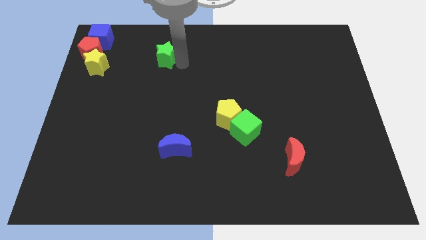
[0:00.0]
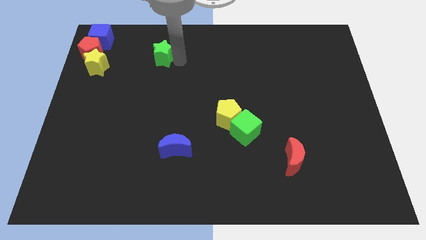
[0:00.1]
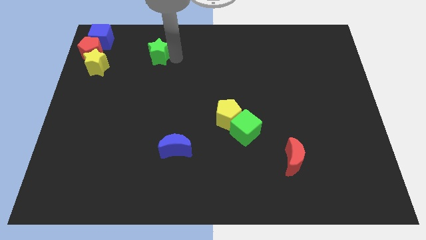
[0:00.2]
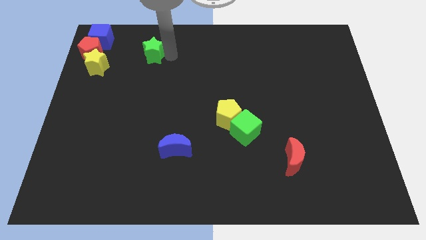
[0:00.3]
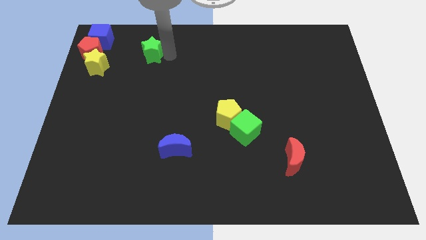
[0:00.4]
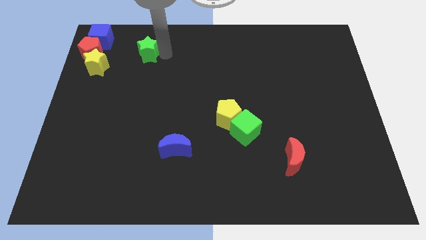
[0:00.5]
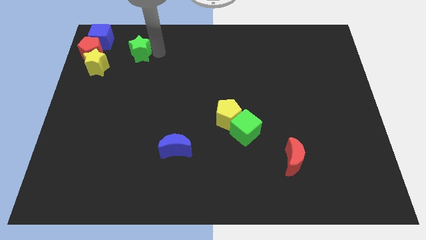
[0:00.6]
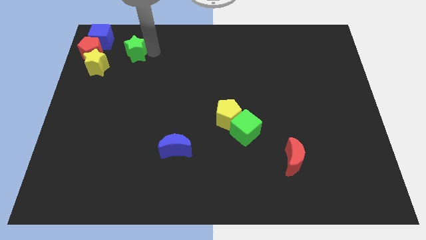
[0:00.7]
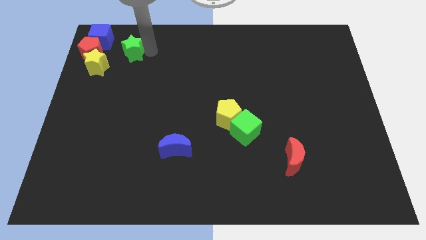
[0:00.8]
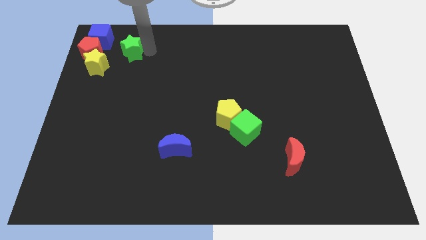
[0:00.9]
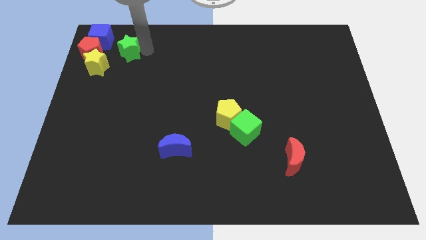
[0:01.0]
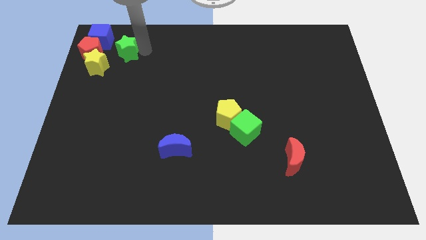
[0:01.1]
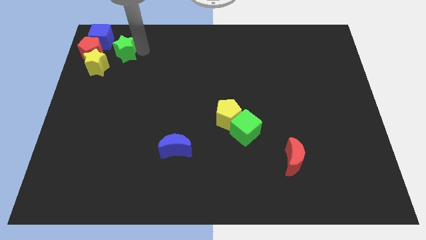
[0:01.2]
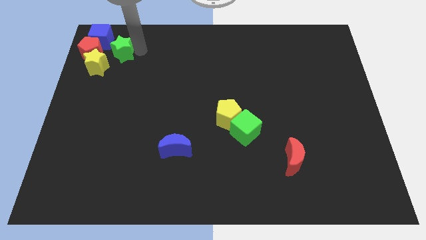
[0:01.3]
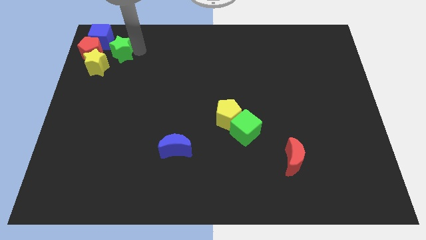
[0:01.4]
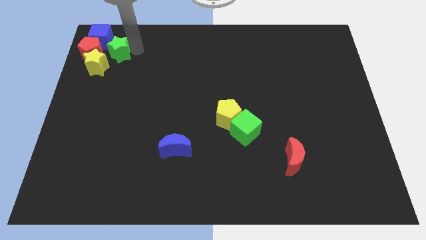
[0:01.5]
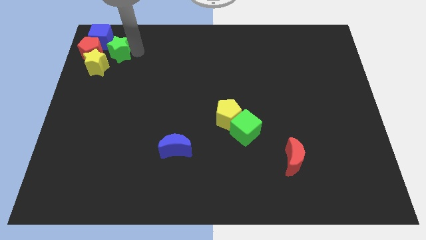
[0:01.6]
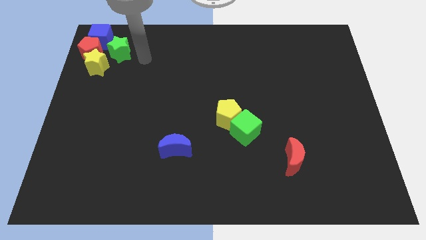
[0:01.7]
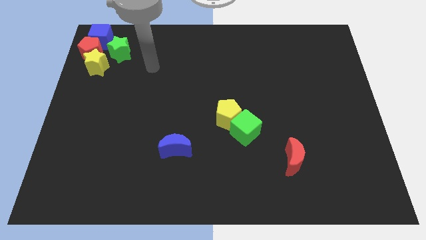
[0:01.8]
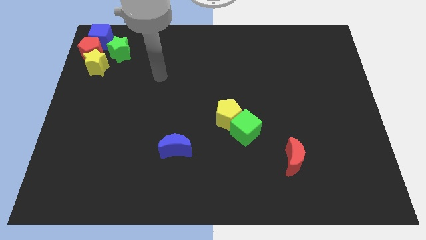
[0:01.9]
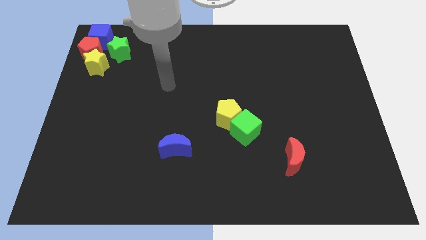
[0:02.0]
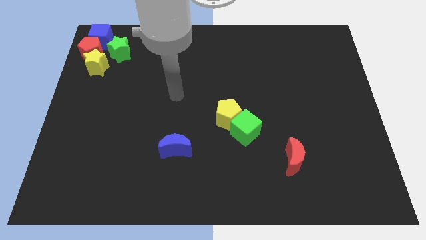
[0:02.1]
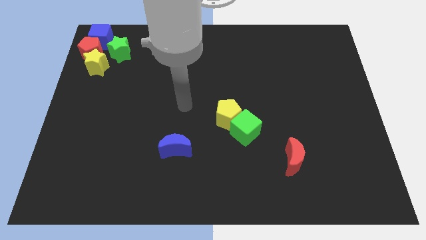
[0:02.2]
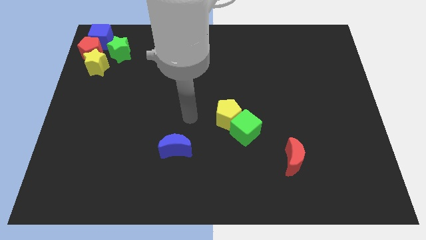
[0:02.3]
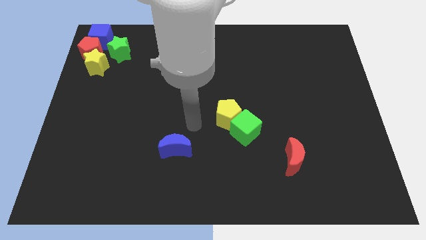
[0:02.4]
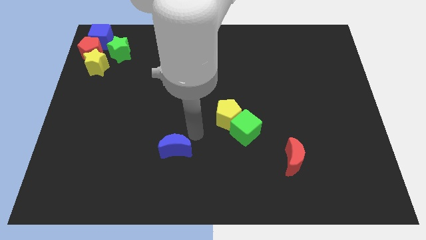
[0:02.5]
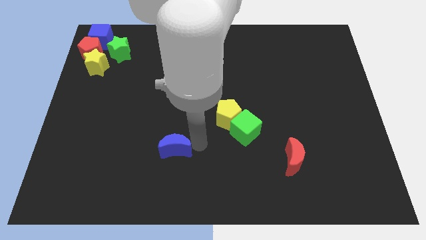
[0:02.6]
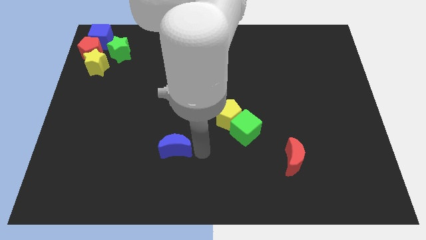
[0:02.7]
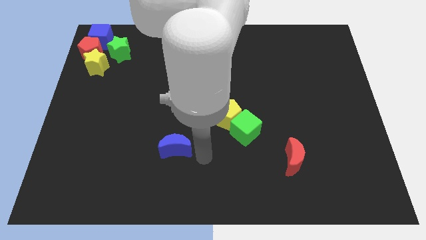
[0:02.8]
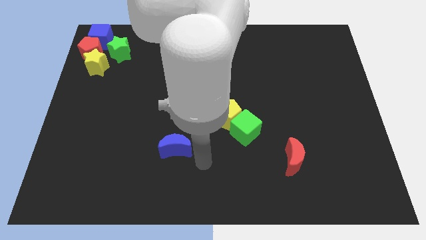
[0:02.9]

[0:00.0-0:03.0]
push the green star right to the red pentagon

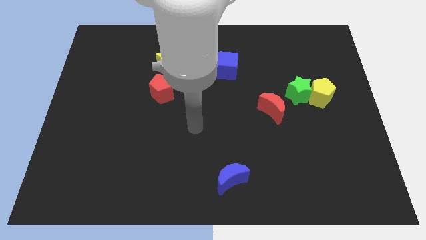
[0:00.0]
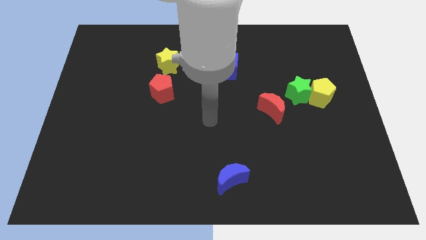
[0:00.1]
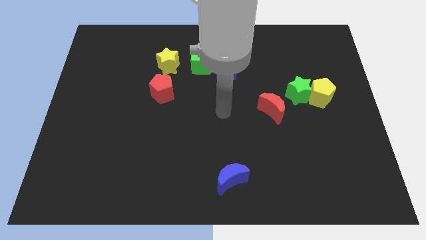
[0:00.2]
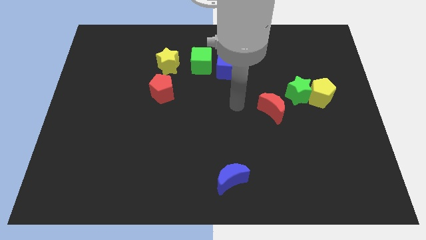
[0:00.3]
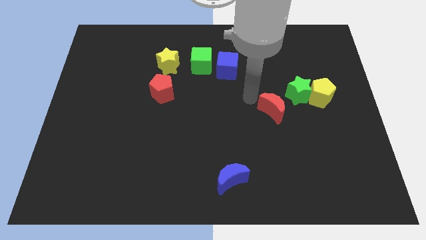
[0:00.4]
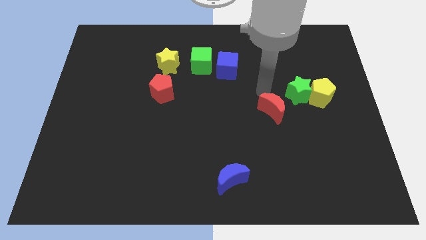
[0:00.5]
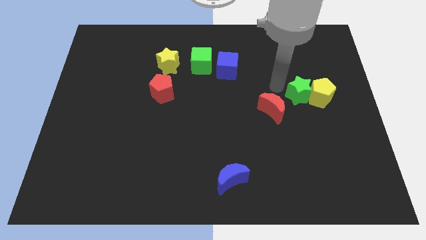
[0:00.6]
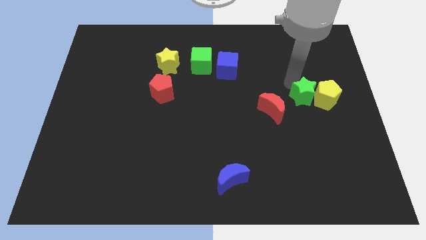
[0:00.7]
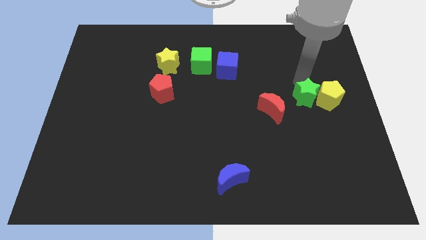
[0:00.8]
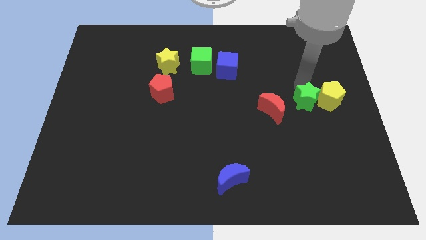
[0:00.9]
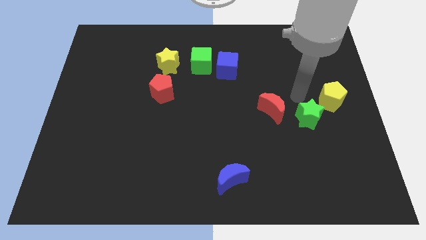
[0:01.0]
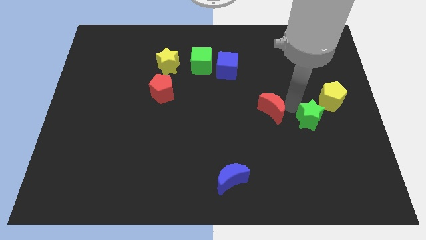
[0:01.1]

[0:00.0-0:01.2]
separate the green star and yellow pentagon

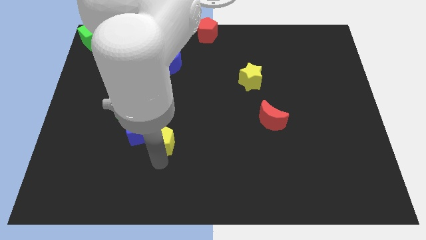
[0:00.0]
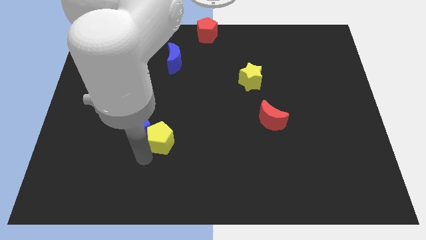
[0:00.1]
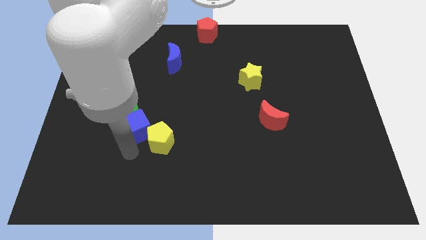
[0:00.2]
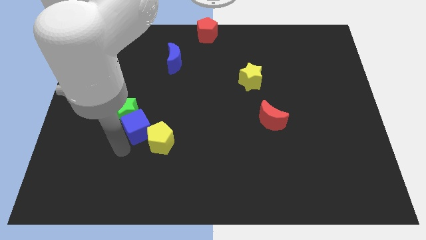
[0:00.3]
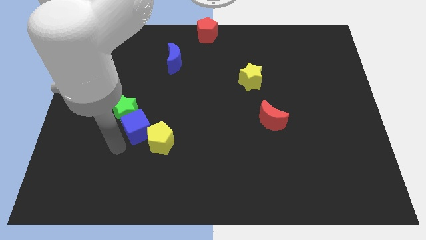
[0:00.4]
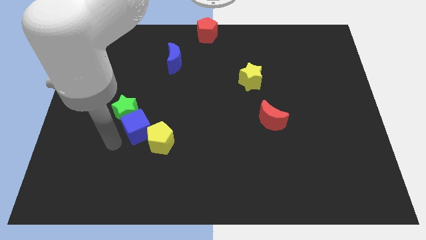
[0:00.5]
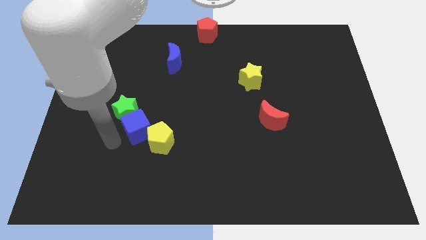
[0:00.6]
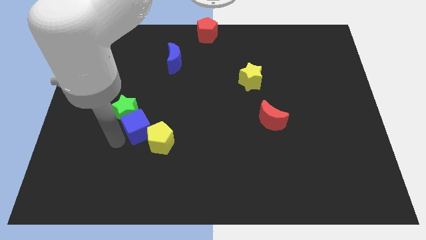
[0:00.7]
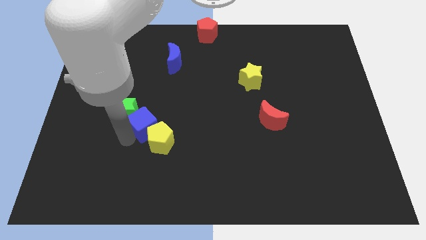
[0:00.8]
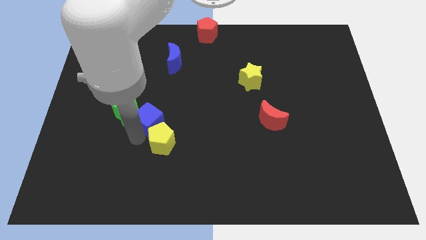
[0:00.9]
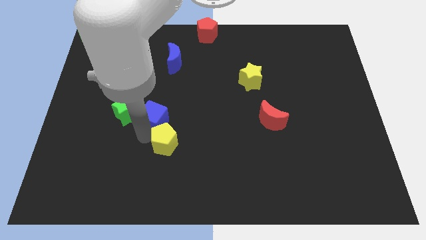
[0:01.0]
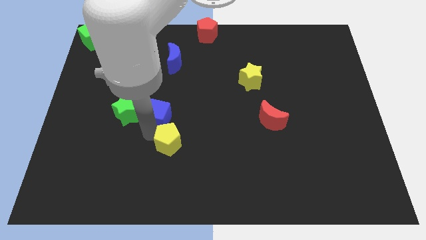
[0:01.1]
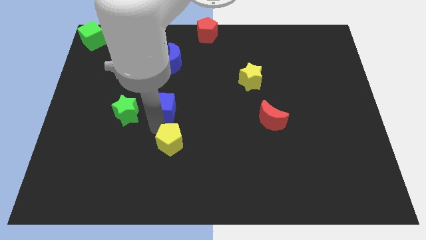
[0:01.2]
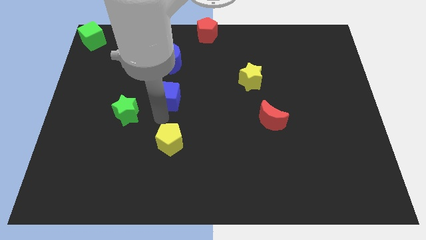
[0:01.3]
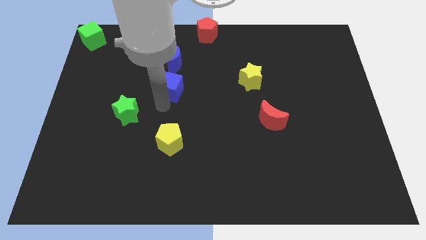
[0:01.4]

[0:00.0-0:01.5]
push the blue cube upwards

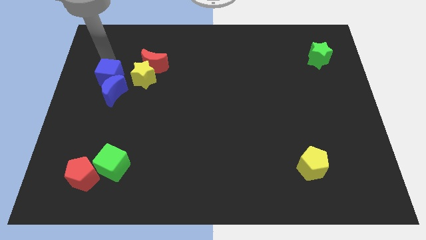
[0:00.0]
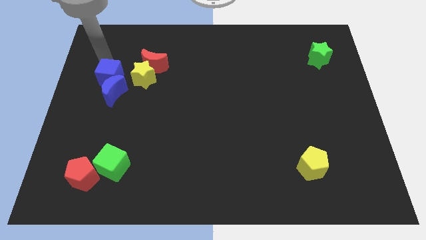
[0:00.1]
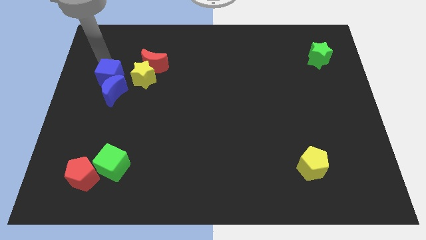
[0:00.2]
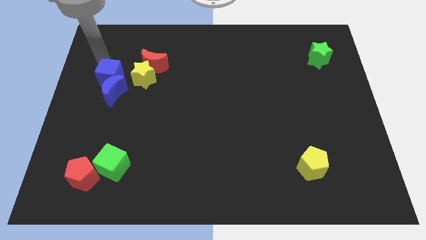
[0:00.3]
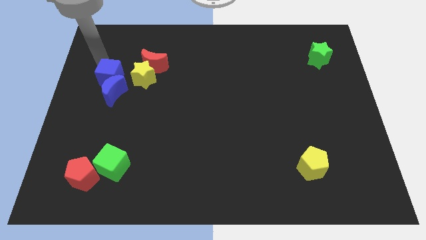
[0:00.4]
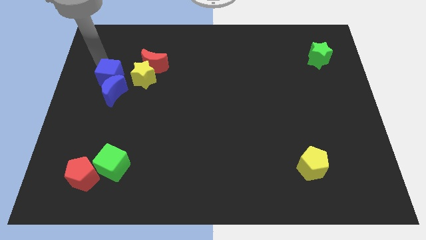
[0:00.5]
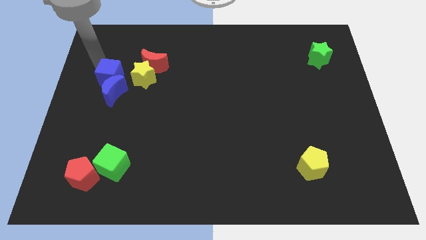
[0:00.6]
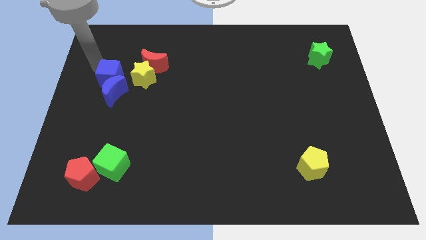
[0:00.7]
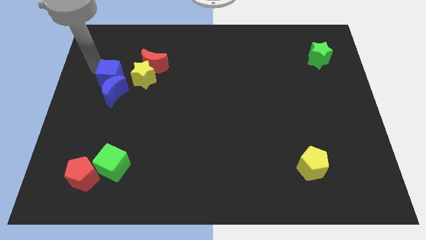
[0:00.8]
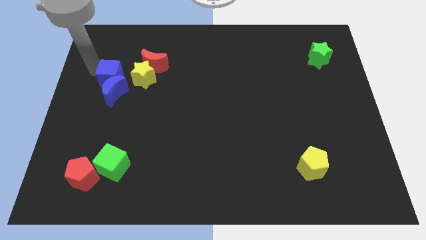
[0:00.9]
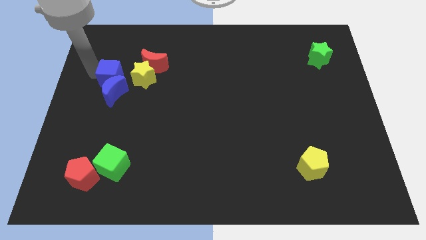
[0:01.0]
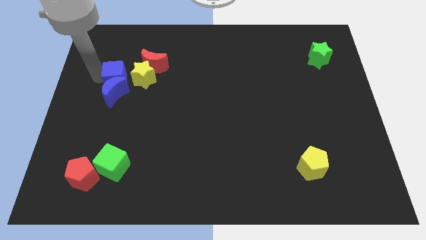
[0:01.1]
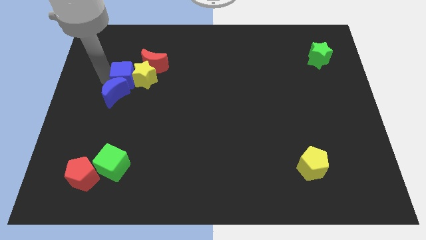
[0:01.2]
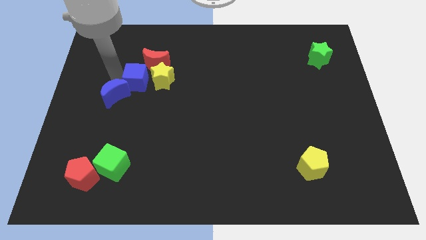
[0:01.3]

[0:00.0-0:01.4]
move the blue cube in between the red crescent and blue crescent

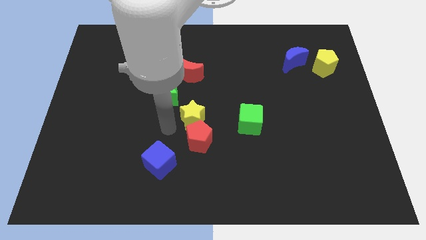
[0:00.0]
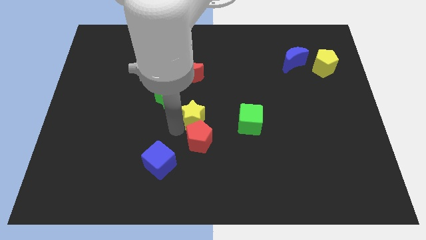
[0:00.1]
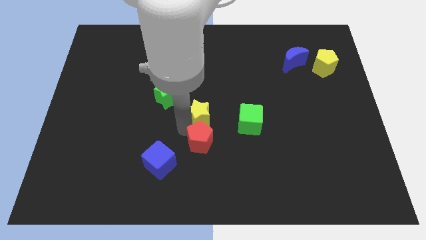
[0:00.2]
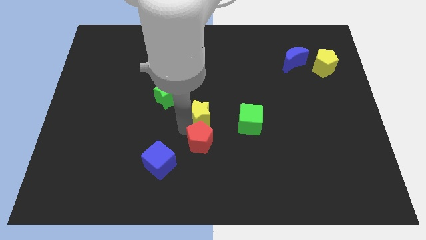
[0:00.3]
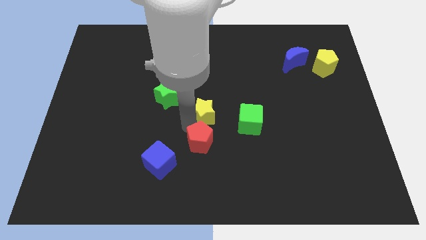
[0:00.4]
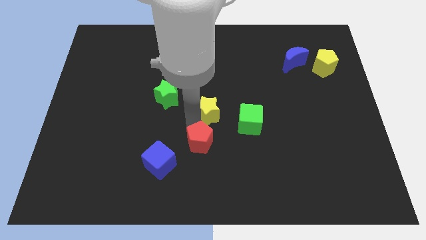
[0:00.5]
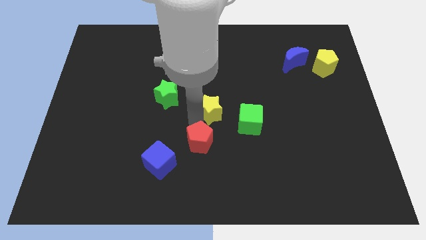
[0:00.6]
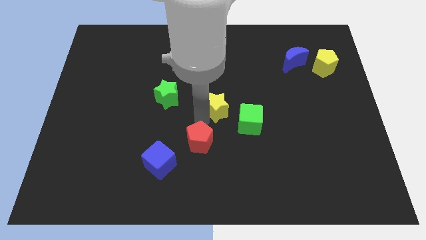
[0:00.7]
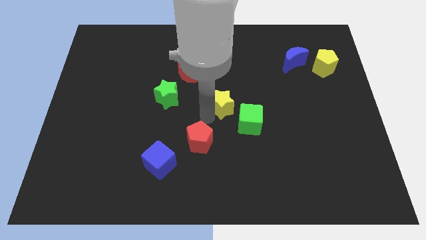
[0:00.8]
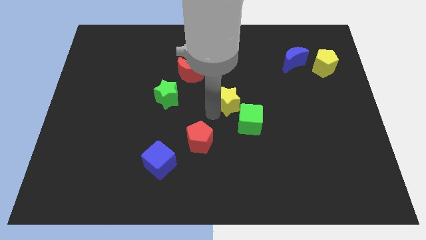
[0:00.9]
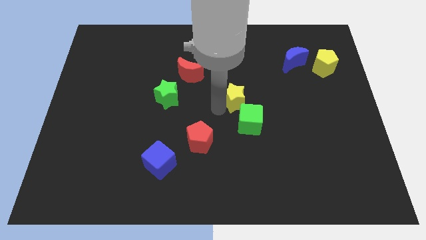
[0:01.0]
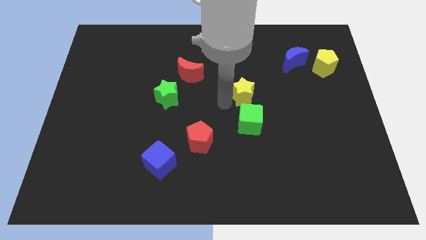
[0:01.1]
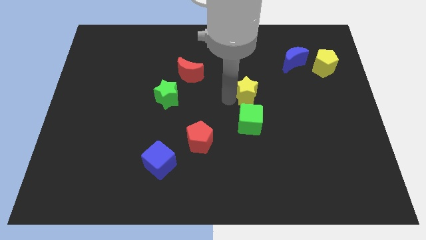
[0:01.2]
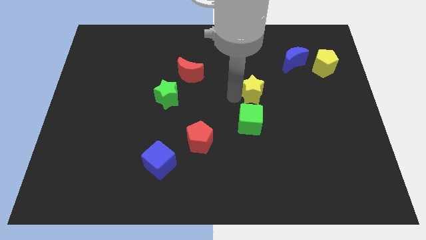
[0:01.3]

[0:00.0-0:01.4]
move the yellow star above to the green cube

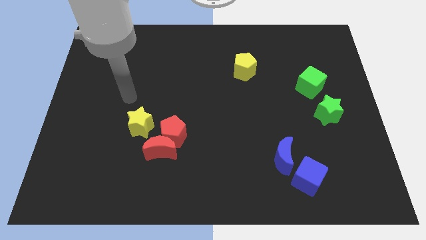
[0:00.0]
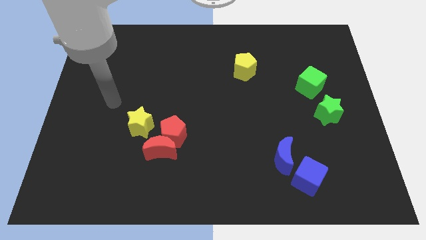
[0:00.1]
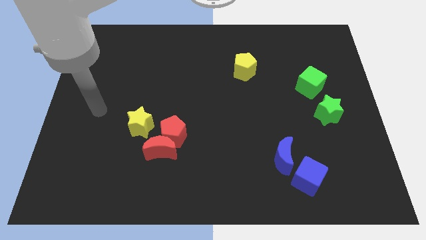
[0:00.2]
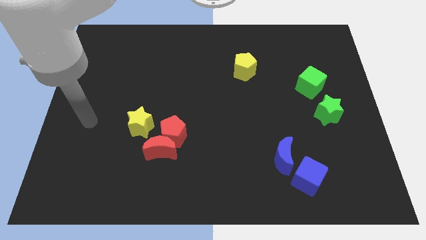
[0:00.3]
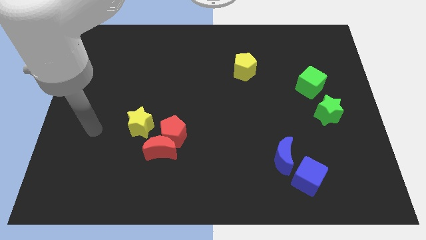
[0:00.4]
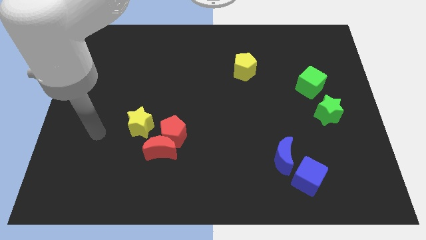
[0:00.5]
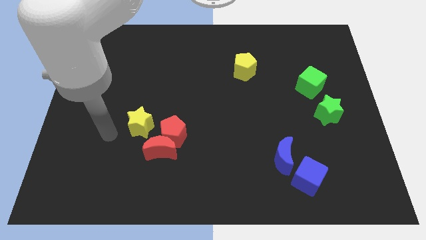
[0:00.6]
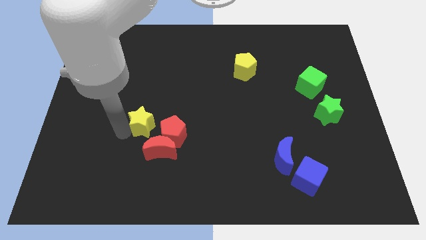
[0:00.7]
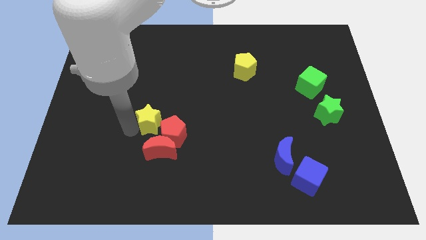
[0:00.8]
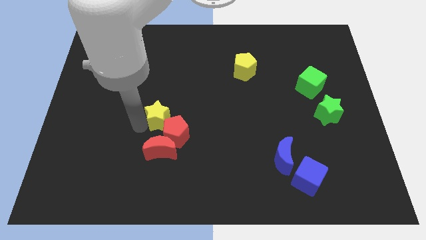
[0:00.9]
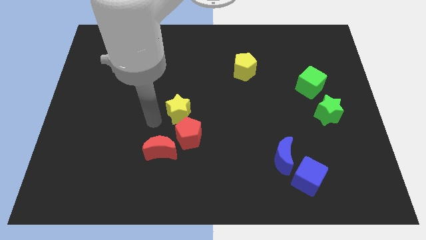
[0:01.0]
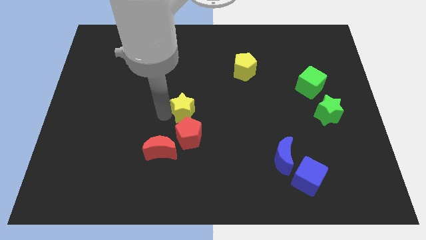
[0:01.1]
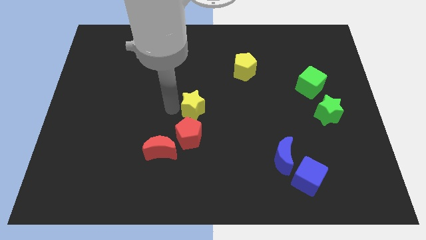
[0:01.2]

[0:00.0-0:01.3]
place the yellow star above the red pentagon
